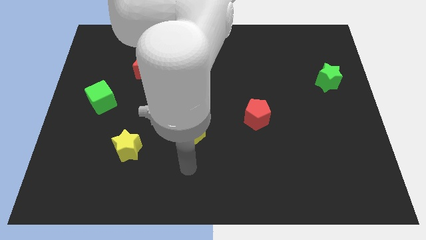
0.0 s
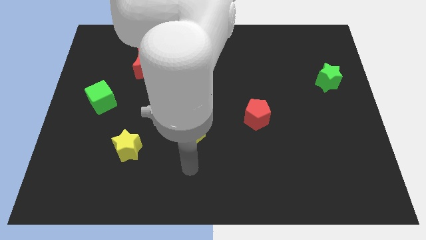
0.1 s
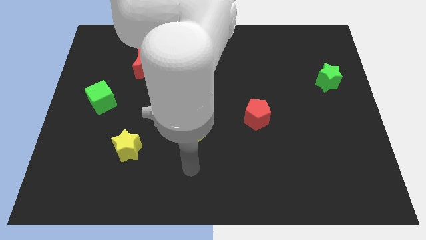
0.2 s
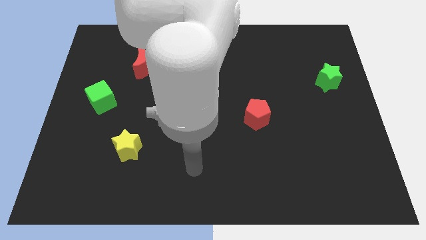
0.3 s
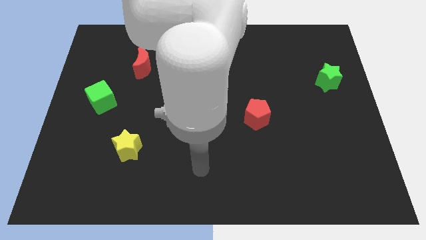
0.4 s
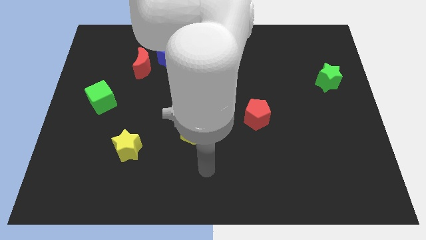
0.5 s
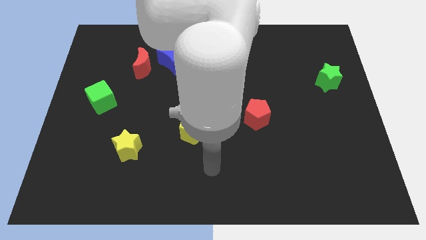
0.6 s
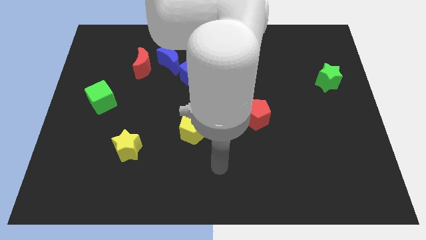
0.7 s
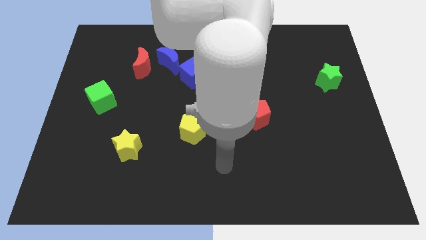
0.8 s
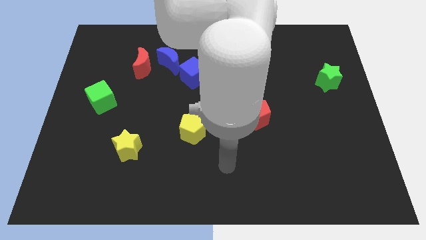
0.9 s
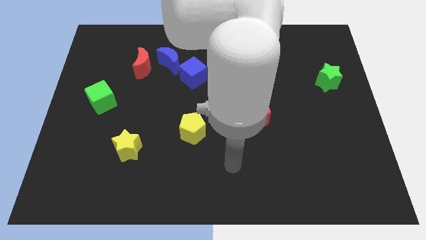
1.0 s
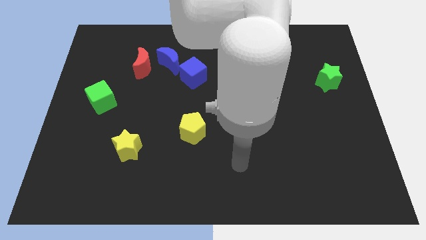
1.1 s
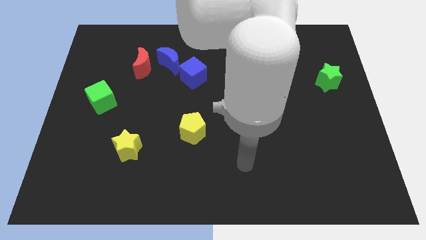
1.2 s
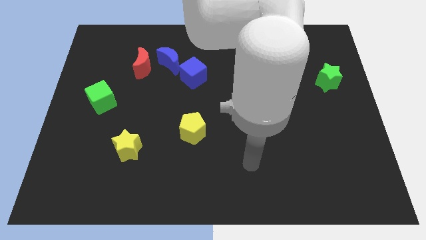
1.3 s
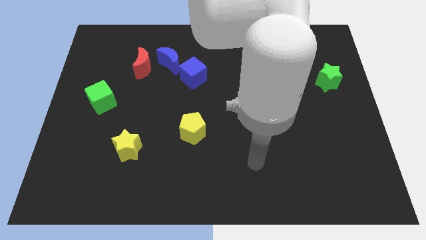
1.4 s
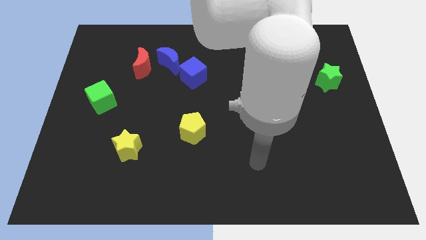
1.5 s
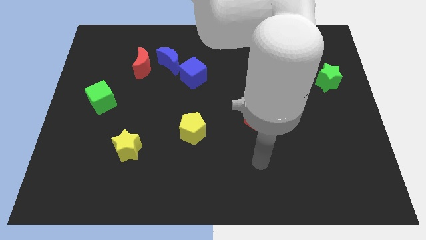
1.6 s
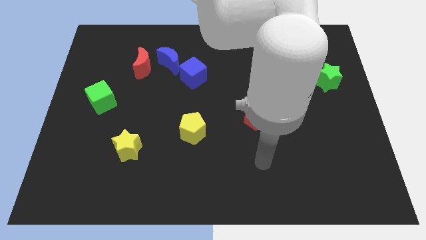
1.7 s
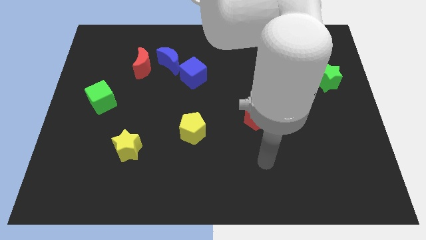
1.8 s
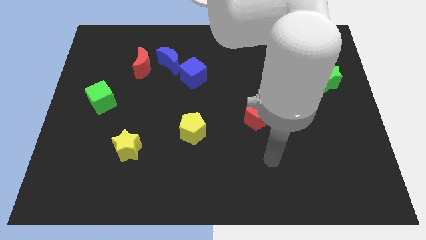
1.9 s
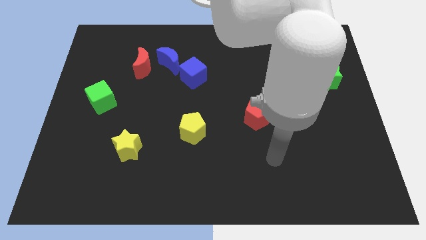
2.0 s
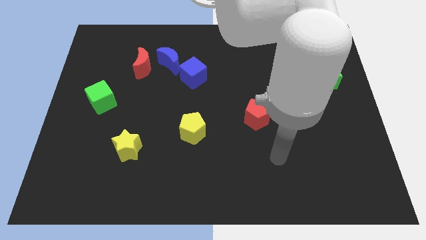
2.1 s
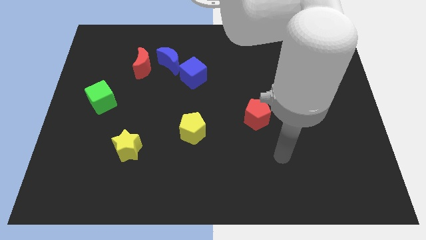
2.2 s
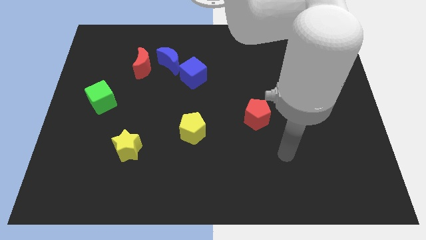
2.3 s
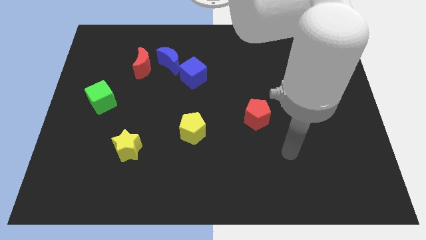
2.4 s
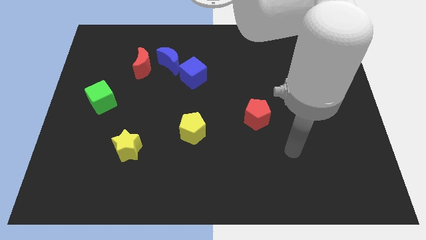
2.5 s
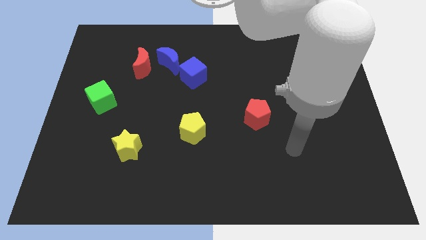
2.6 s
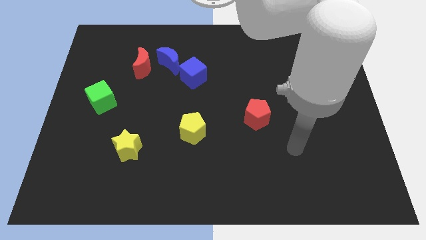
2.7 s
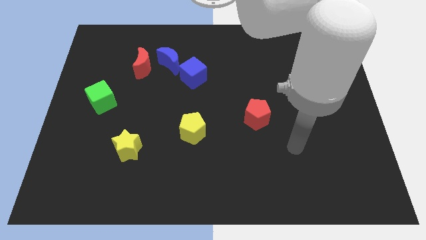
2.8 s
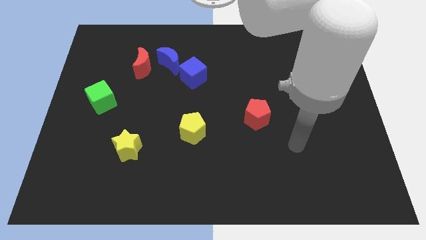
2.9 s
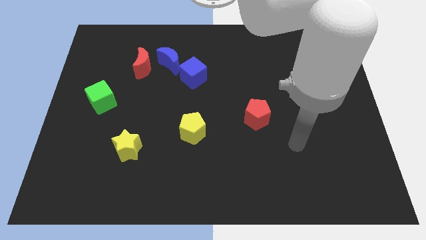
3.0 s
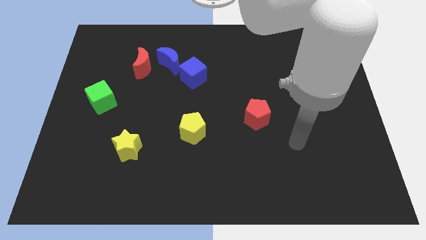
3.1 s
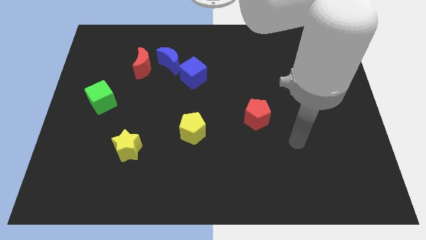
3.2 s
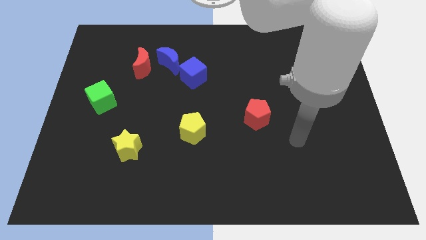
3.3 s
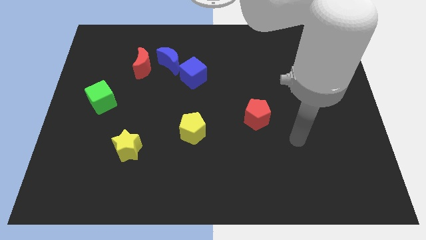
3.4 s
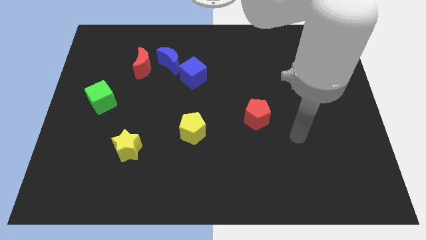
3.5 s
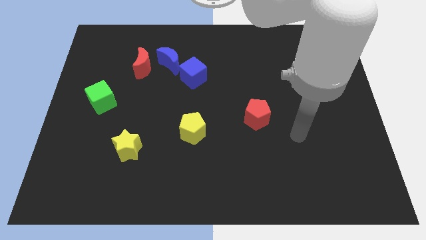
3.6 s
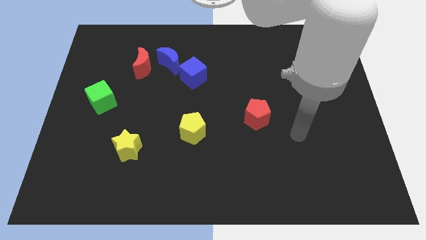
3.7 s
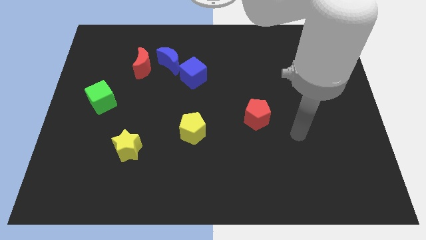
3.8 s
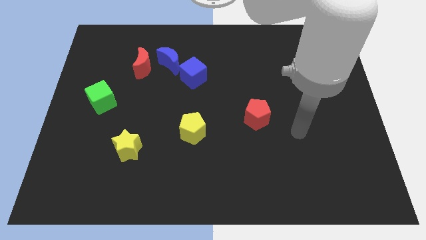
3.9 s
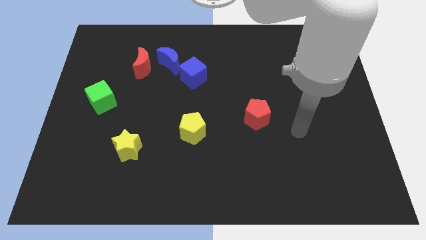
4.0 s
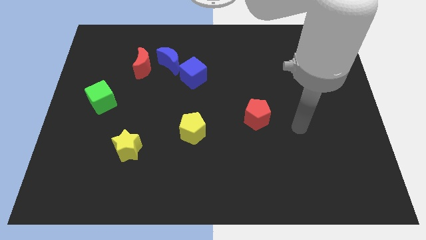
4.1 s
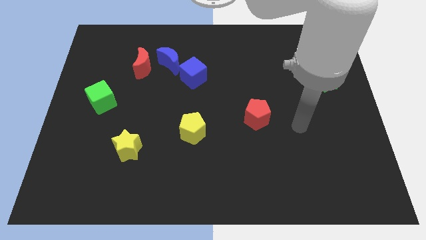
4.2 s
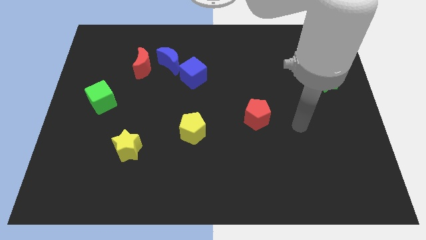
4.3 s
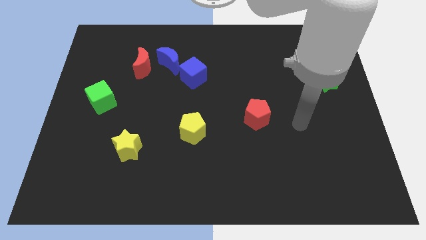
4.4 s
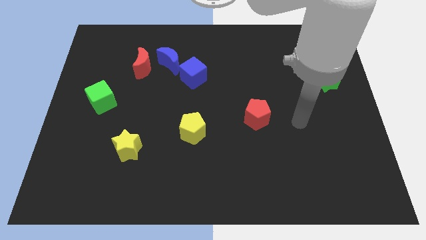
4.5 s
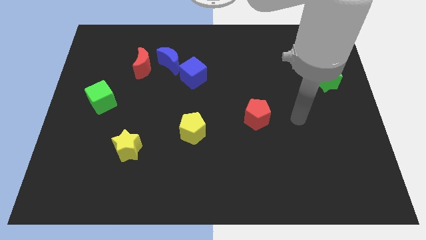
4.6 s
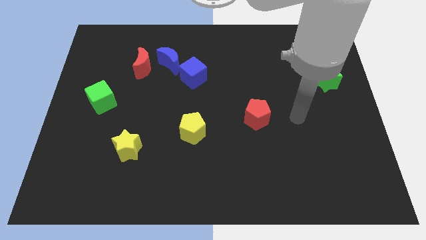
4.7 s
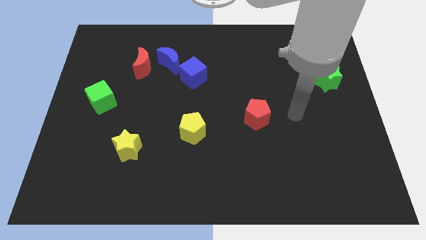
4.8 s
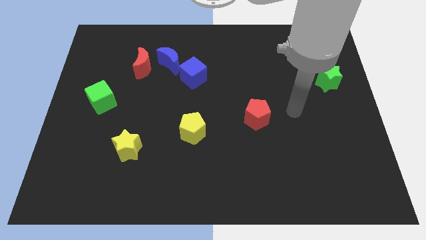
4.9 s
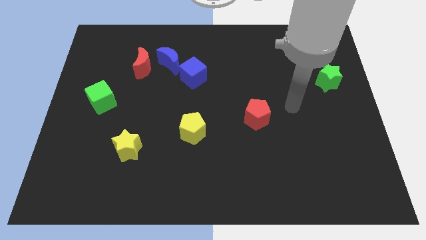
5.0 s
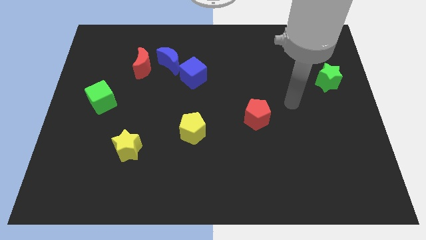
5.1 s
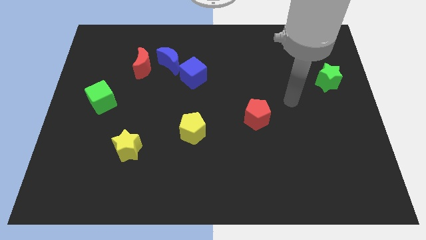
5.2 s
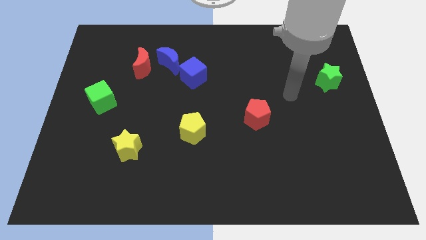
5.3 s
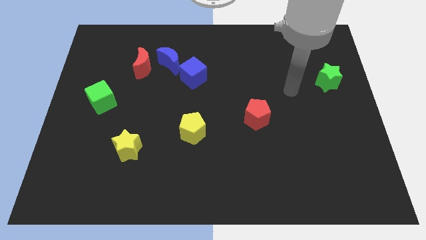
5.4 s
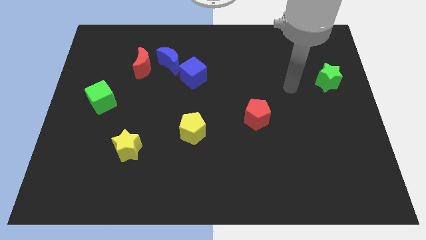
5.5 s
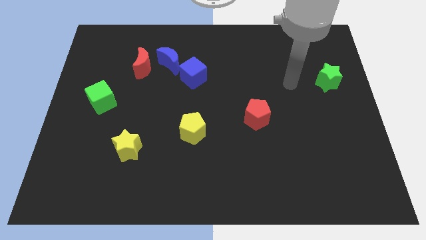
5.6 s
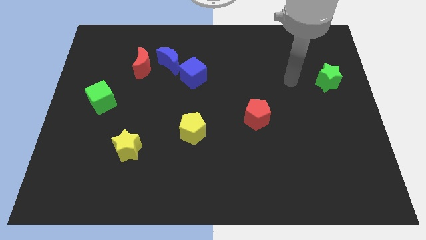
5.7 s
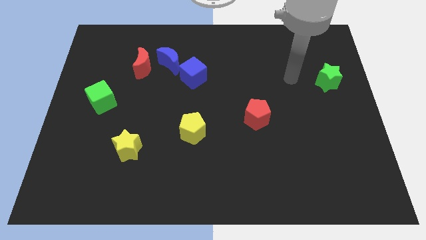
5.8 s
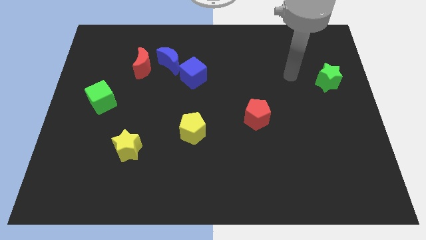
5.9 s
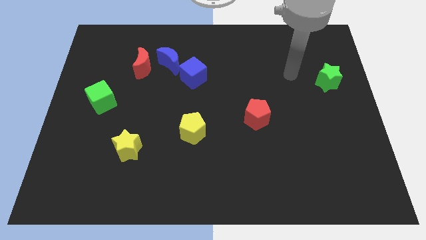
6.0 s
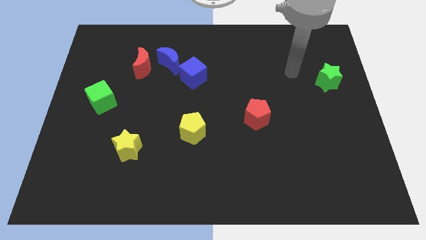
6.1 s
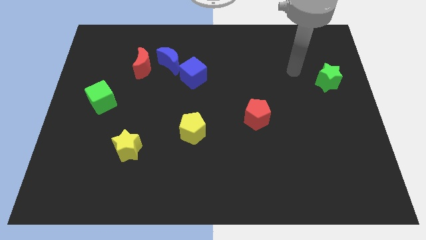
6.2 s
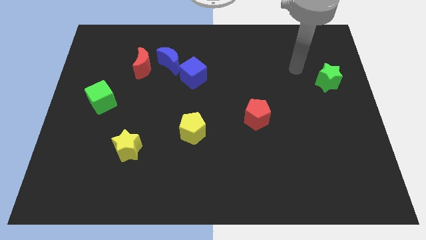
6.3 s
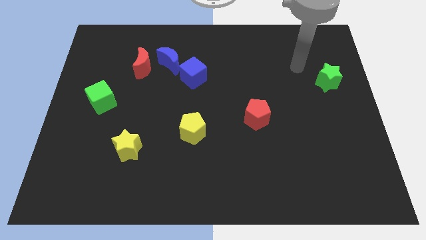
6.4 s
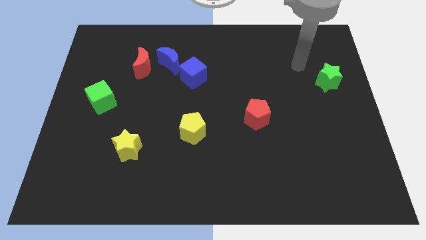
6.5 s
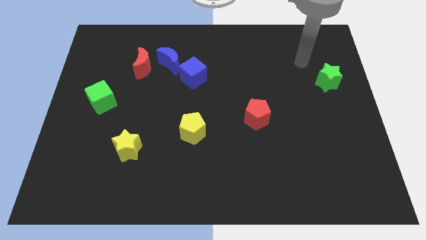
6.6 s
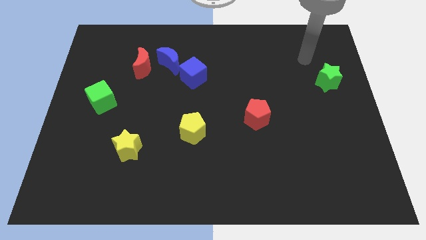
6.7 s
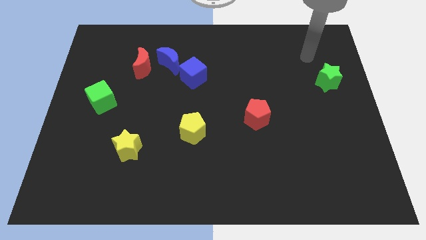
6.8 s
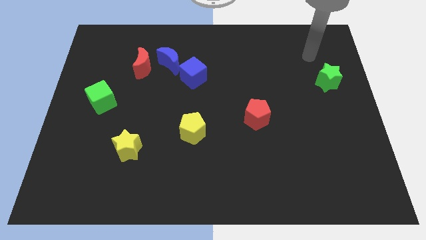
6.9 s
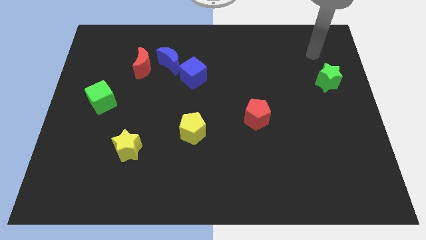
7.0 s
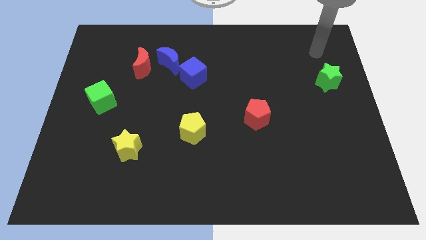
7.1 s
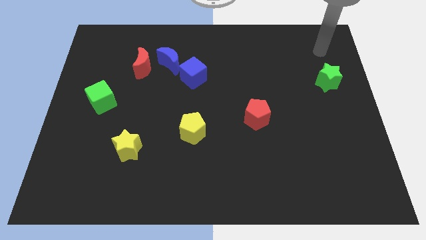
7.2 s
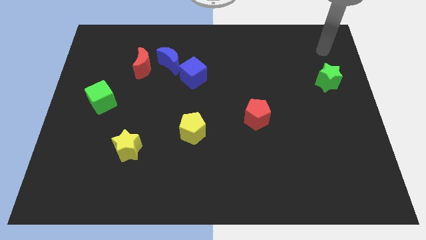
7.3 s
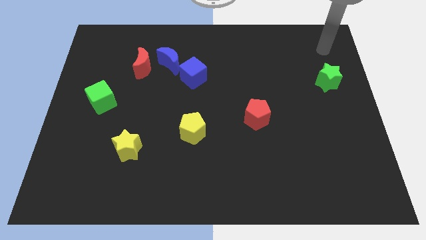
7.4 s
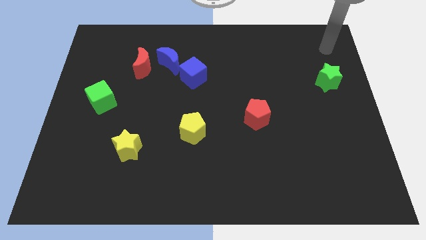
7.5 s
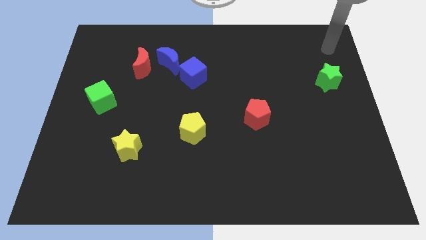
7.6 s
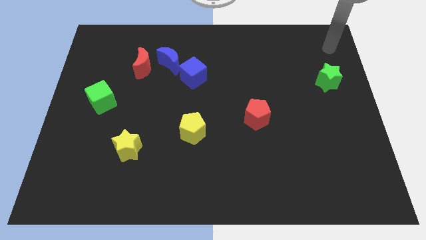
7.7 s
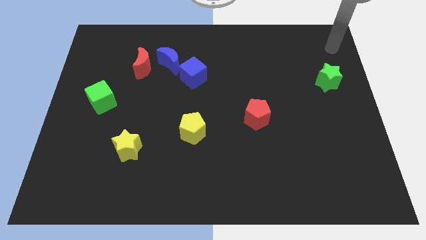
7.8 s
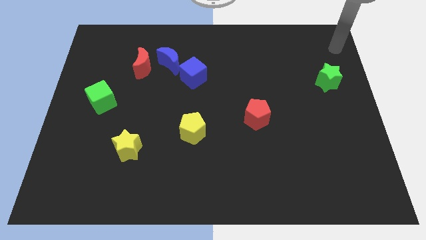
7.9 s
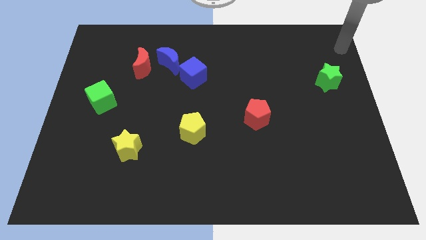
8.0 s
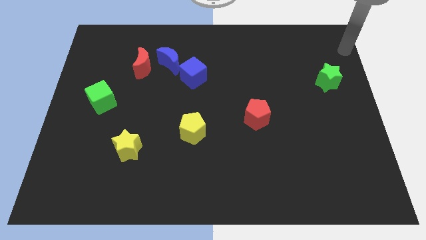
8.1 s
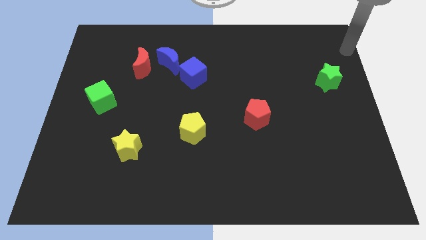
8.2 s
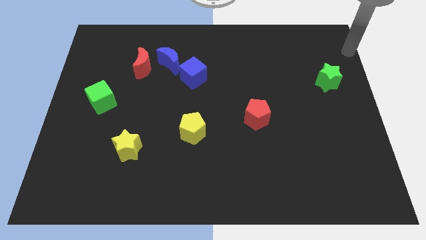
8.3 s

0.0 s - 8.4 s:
point your arm at the top right corner of the board

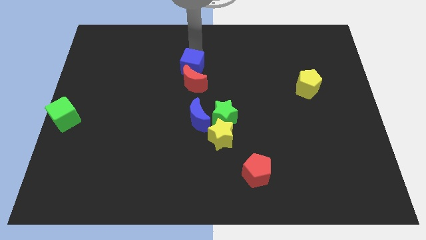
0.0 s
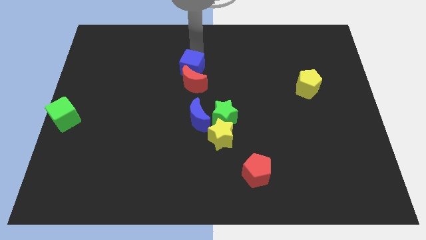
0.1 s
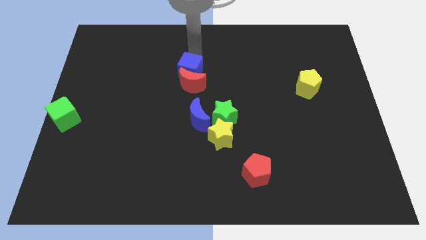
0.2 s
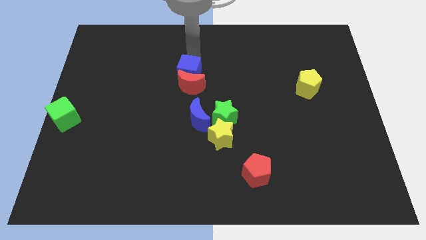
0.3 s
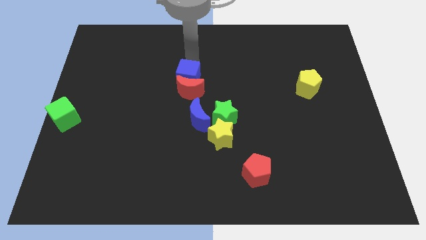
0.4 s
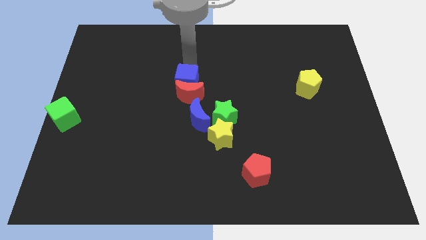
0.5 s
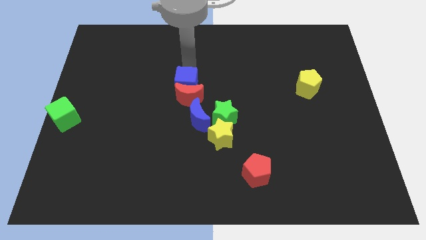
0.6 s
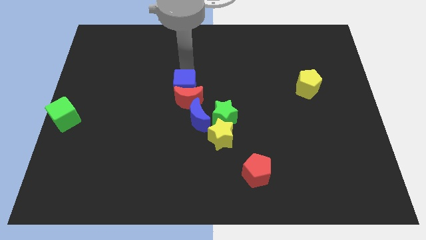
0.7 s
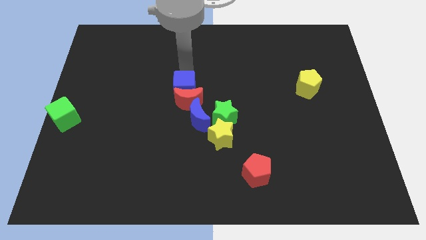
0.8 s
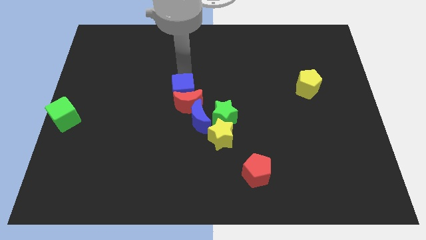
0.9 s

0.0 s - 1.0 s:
push the blue cube and red crescent into the blue crescent
